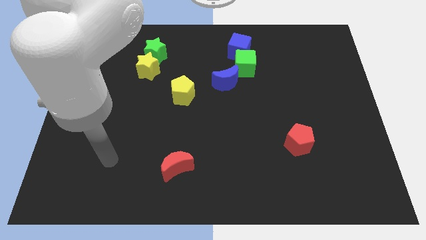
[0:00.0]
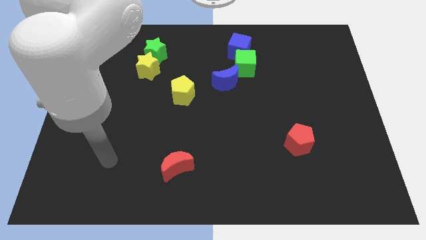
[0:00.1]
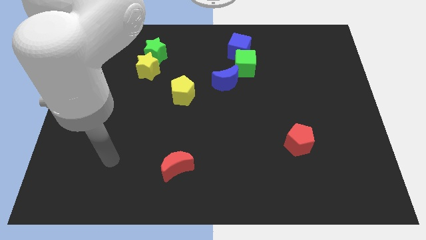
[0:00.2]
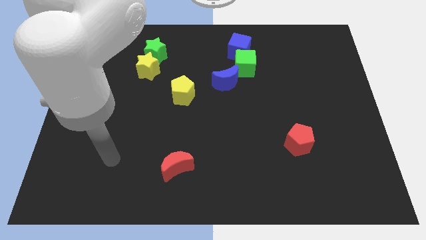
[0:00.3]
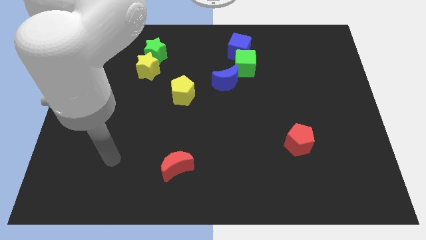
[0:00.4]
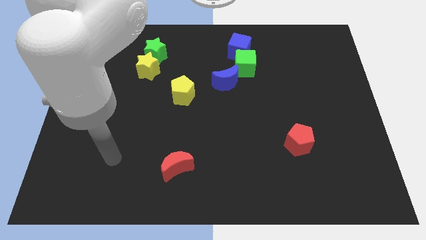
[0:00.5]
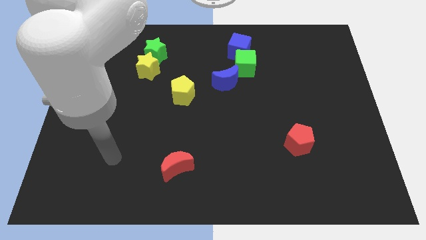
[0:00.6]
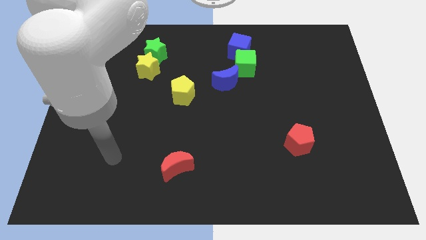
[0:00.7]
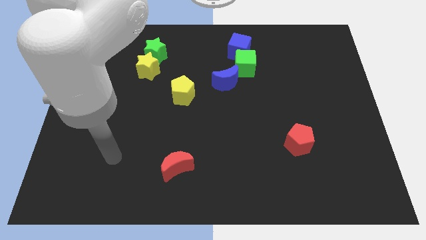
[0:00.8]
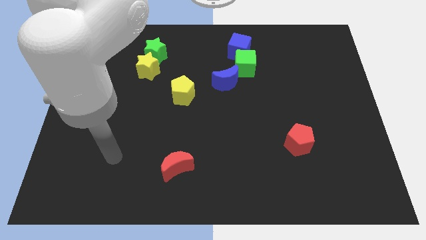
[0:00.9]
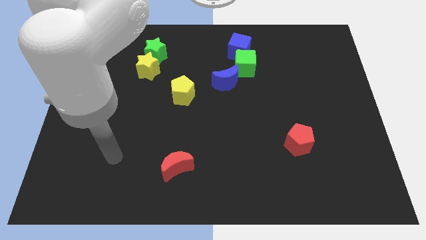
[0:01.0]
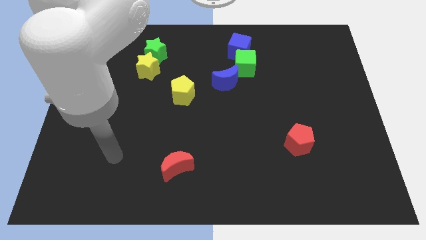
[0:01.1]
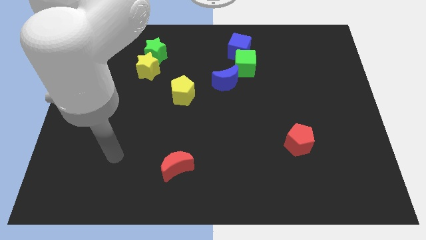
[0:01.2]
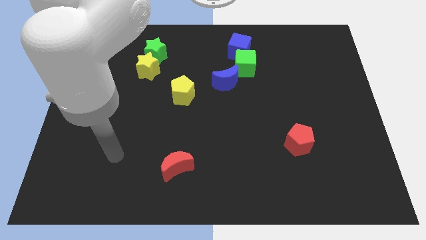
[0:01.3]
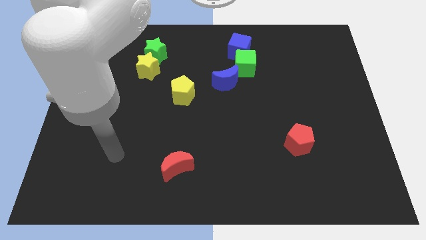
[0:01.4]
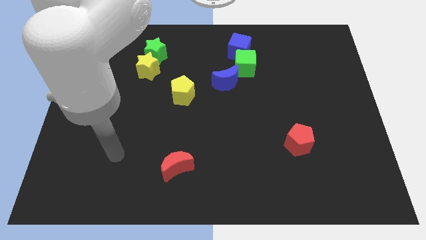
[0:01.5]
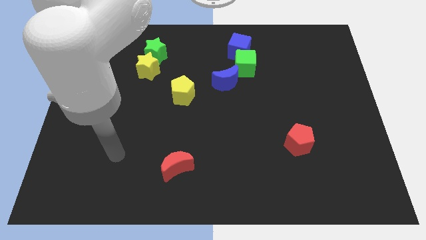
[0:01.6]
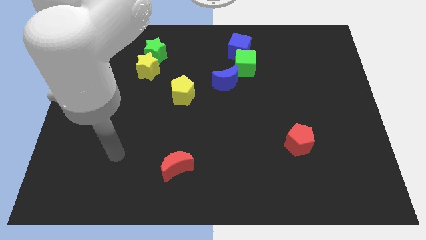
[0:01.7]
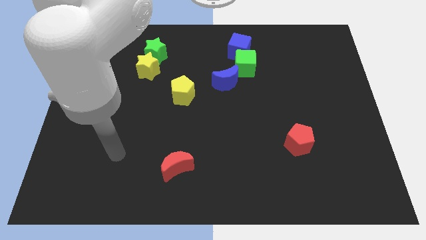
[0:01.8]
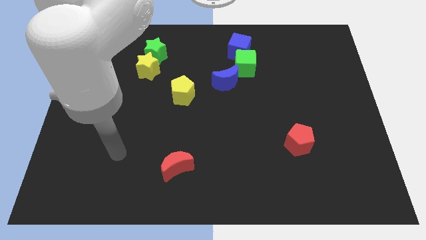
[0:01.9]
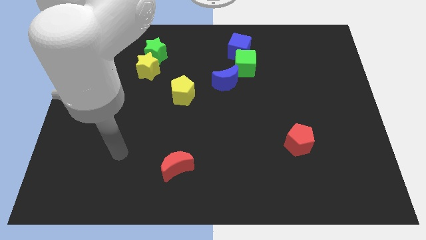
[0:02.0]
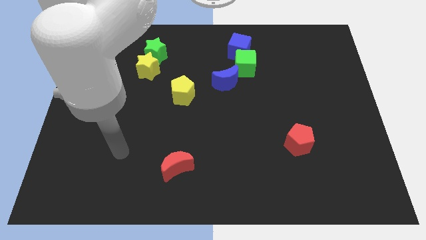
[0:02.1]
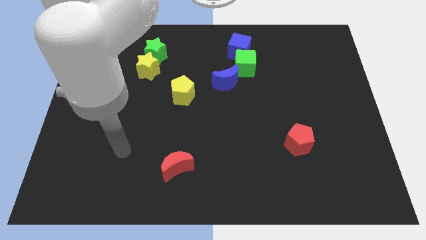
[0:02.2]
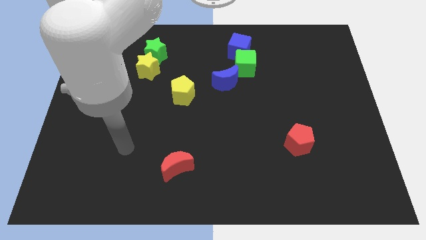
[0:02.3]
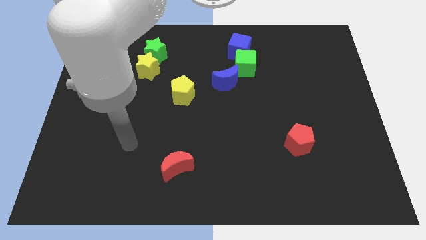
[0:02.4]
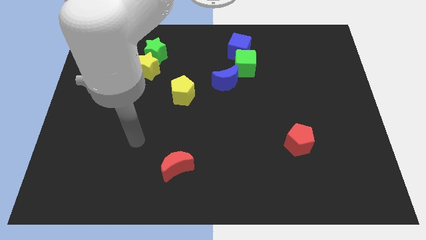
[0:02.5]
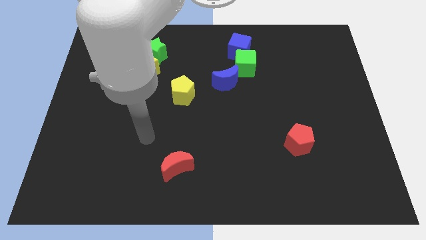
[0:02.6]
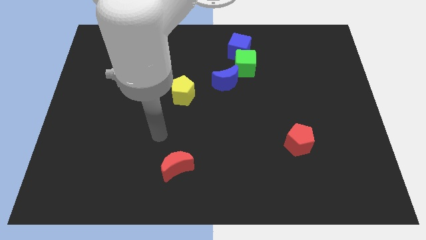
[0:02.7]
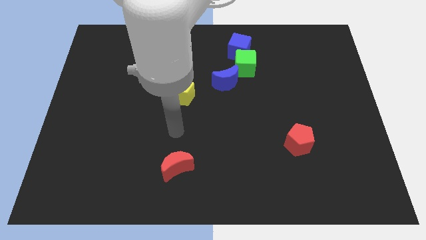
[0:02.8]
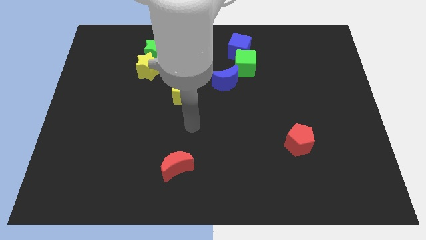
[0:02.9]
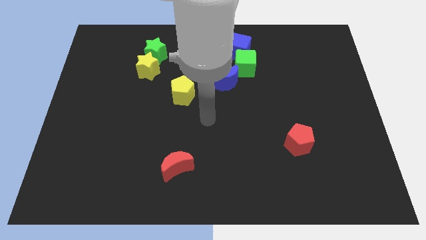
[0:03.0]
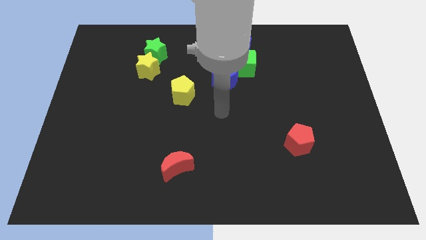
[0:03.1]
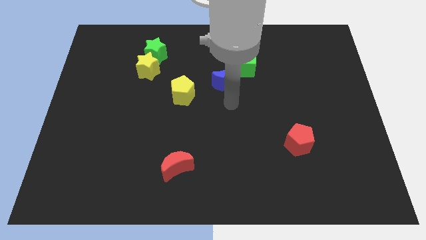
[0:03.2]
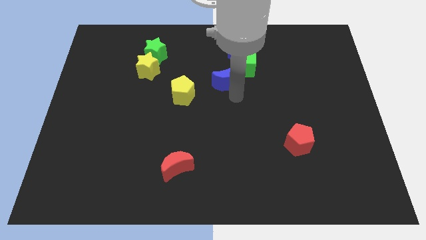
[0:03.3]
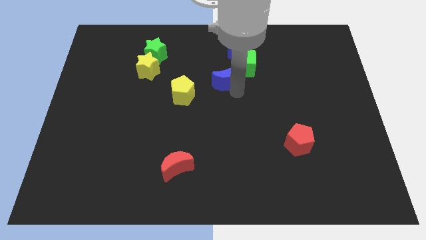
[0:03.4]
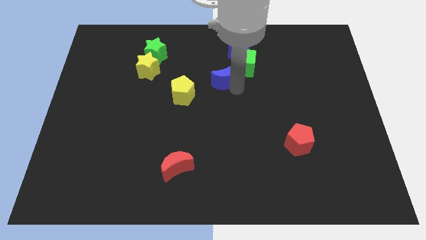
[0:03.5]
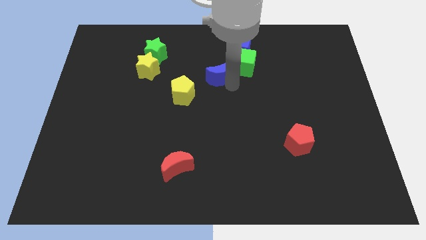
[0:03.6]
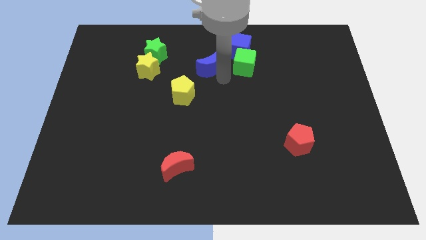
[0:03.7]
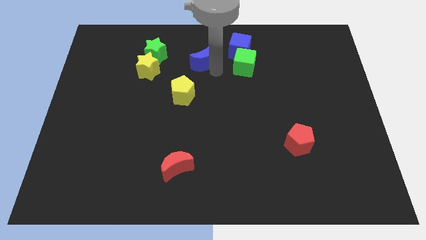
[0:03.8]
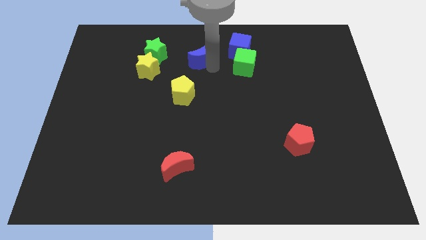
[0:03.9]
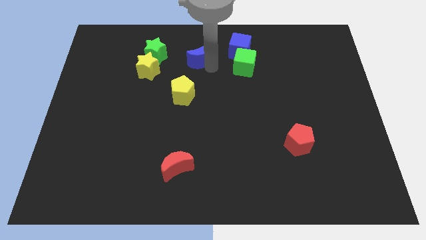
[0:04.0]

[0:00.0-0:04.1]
push the blue moon towards the top center of the board

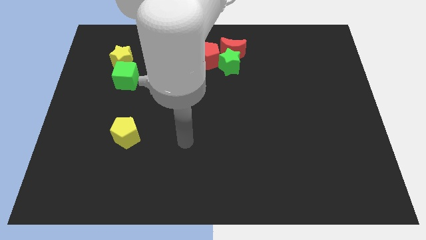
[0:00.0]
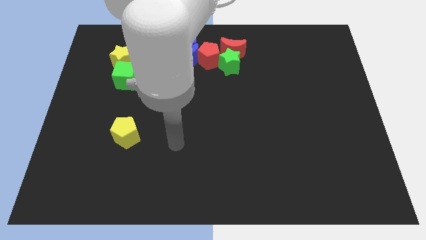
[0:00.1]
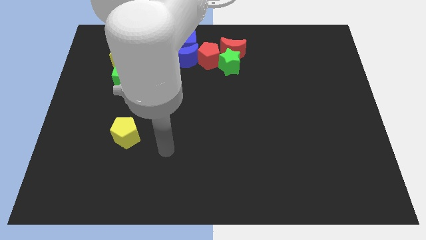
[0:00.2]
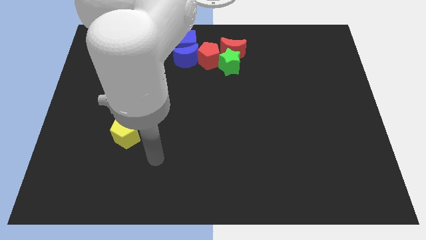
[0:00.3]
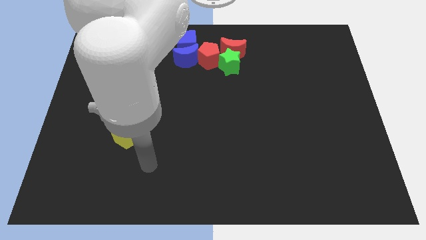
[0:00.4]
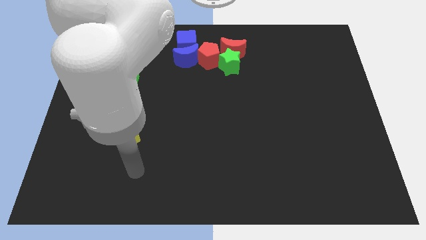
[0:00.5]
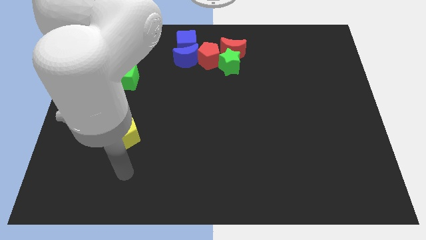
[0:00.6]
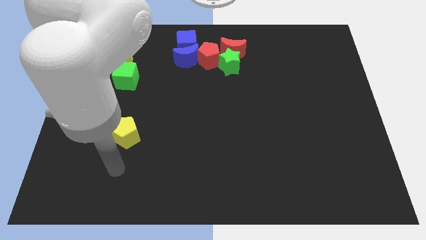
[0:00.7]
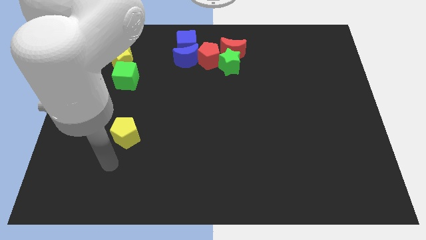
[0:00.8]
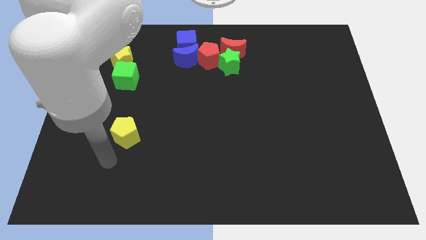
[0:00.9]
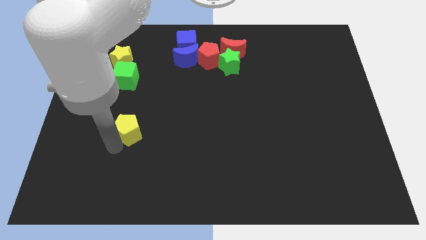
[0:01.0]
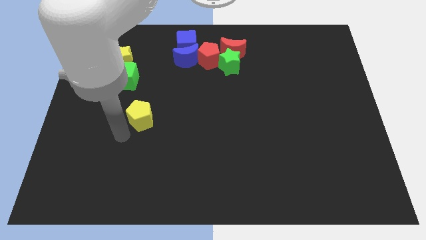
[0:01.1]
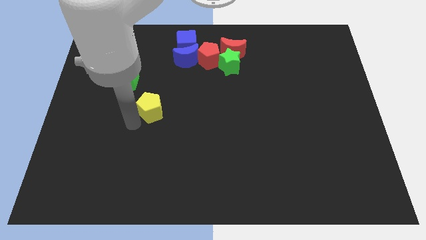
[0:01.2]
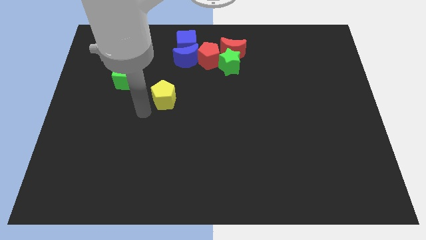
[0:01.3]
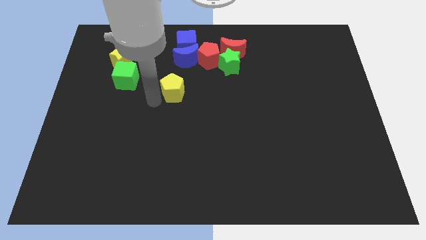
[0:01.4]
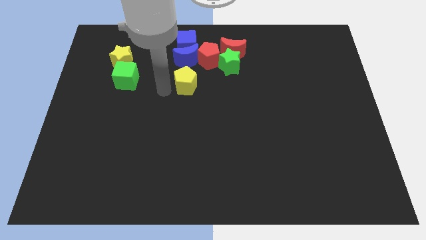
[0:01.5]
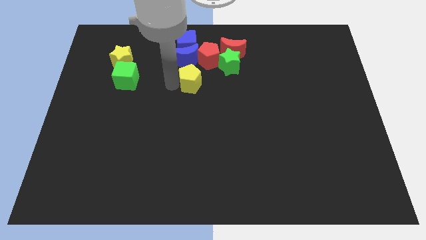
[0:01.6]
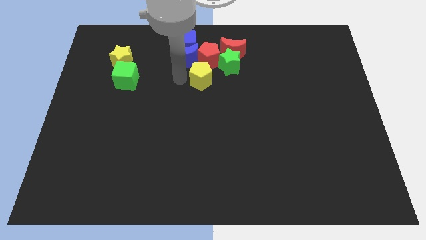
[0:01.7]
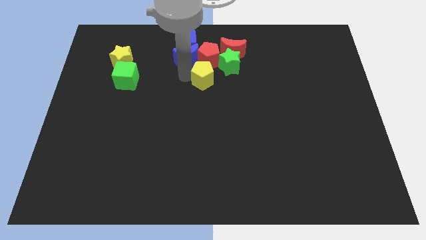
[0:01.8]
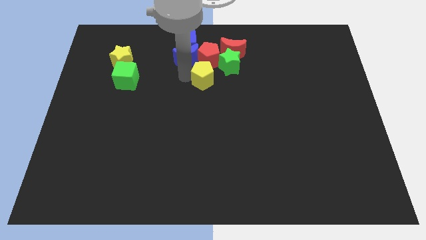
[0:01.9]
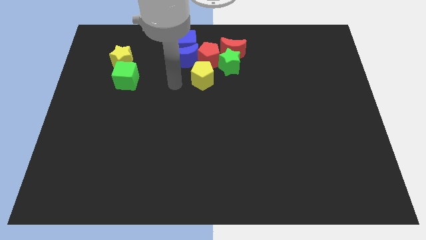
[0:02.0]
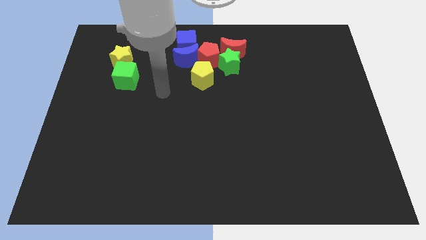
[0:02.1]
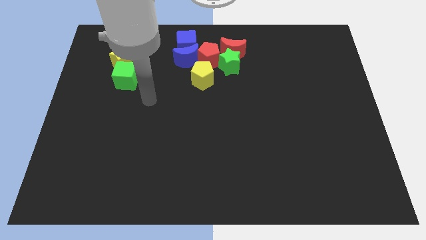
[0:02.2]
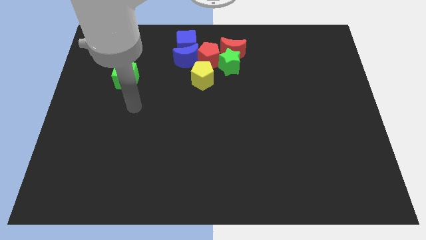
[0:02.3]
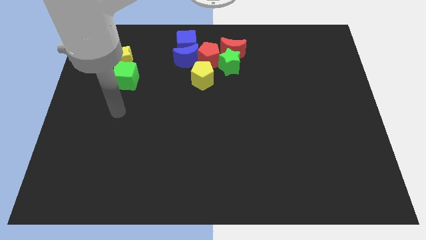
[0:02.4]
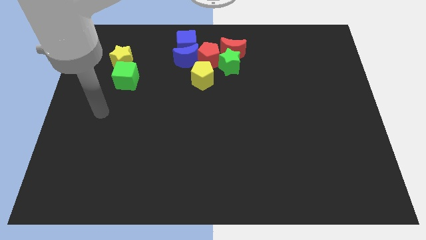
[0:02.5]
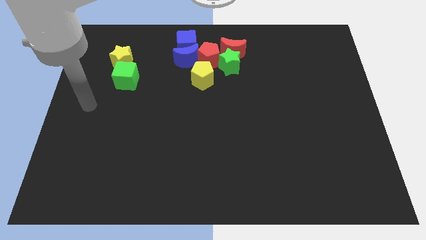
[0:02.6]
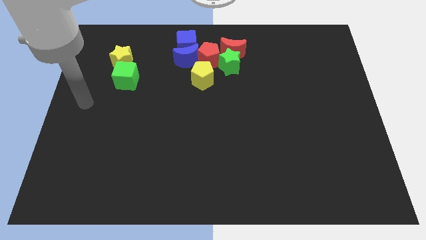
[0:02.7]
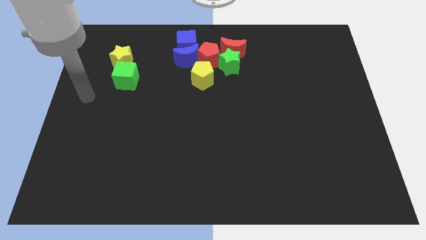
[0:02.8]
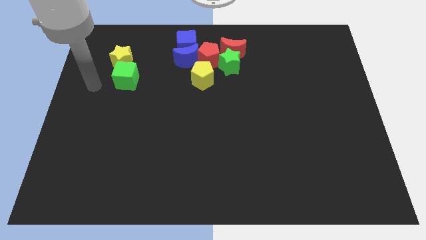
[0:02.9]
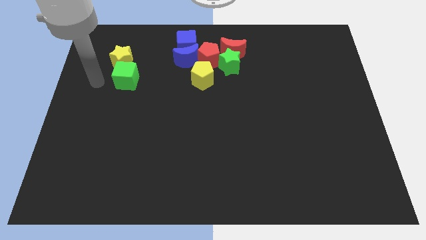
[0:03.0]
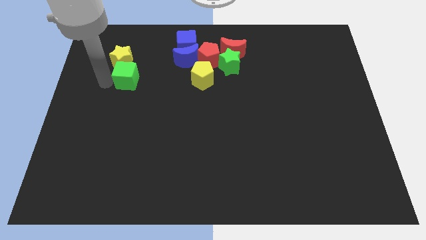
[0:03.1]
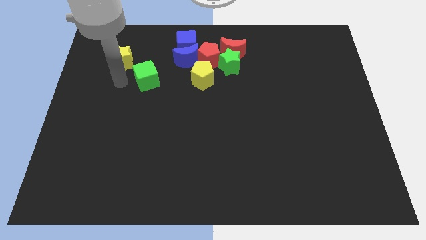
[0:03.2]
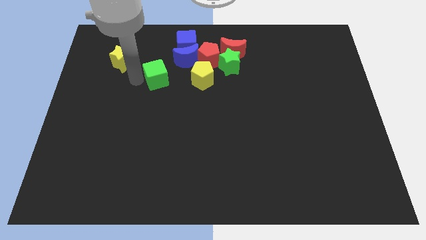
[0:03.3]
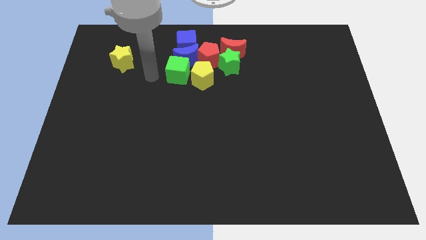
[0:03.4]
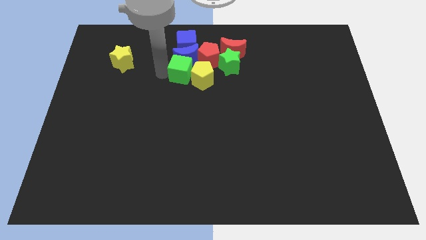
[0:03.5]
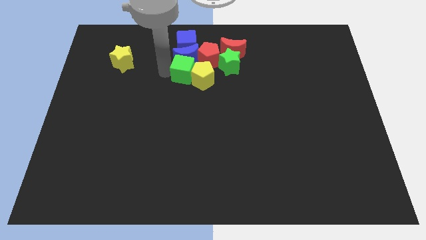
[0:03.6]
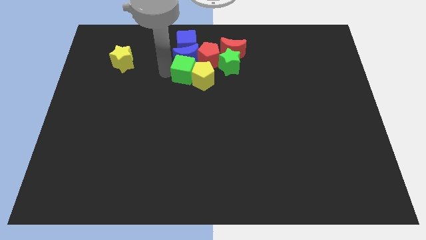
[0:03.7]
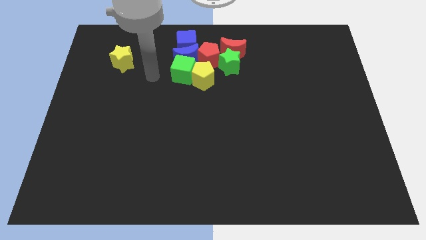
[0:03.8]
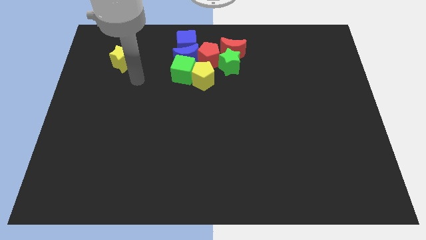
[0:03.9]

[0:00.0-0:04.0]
push the yellow pentagon and green cube below red pentagon

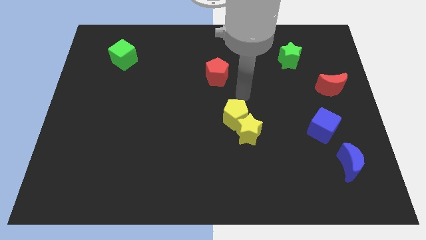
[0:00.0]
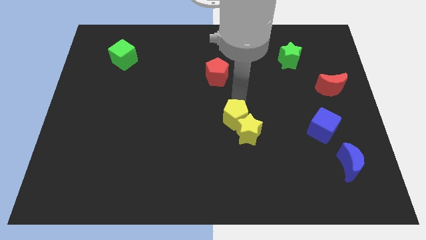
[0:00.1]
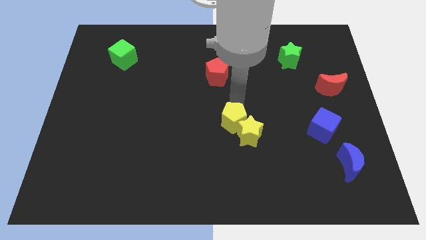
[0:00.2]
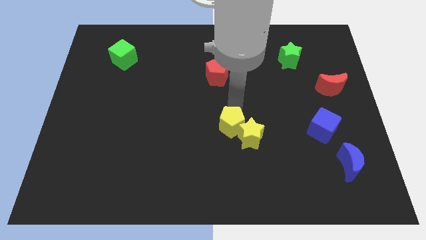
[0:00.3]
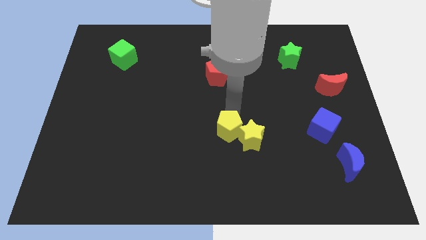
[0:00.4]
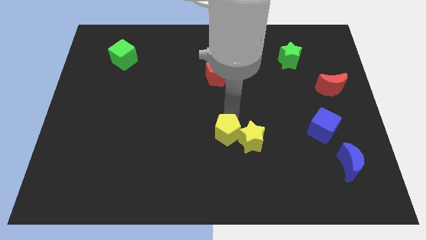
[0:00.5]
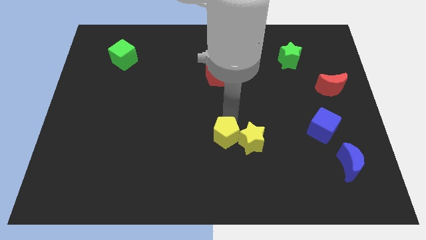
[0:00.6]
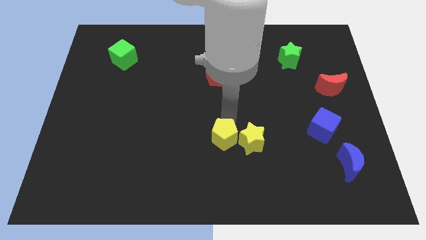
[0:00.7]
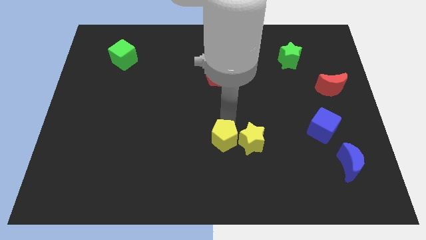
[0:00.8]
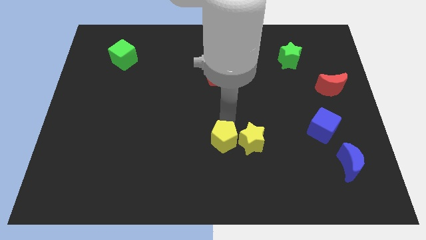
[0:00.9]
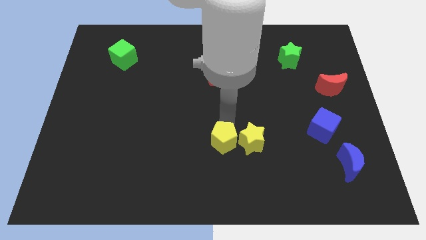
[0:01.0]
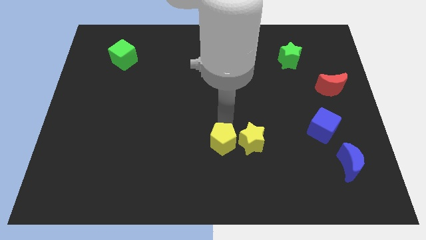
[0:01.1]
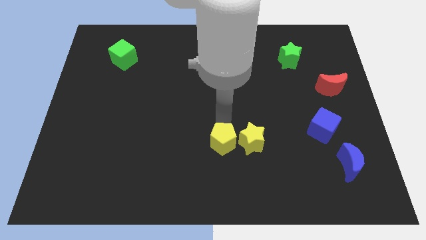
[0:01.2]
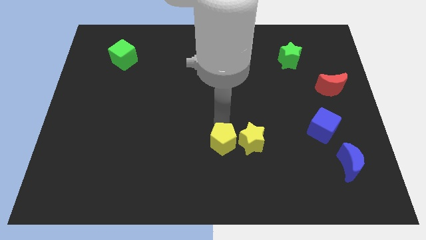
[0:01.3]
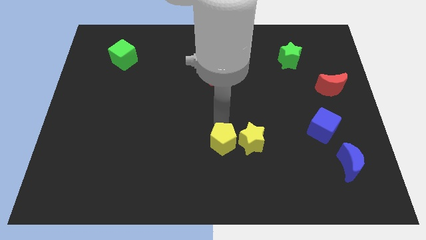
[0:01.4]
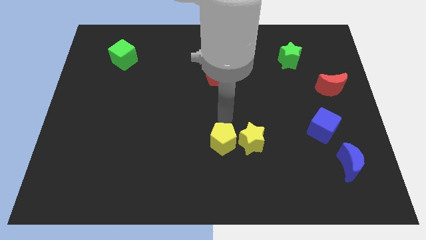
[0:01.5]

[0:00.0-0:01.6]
place the yellow pentagon left to the yellow star
